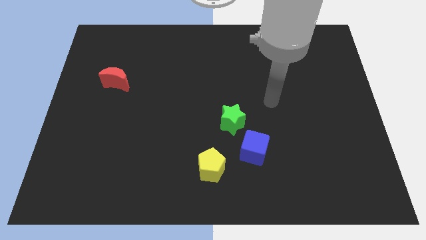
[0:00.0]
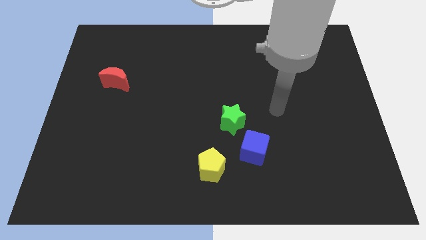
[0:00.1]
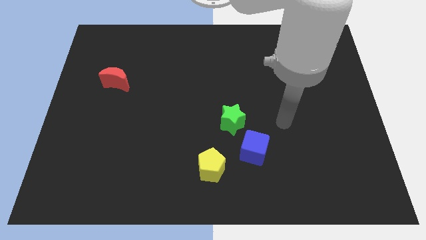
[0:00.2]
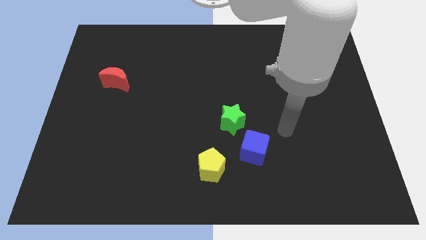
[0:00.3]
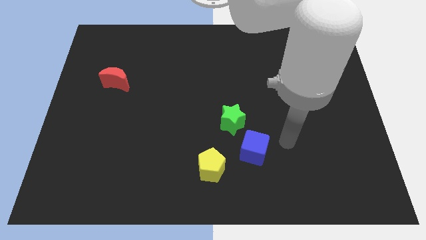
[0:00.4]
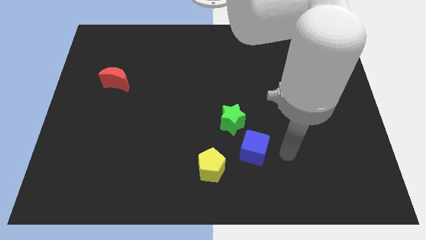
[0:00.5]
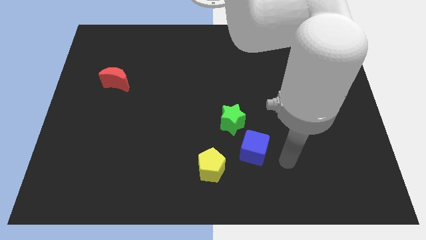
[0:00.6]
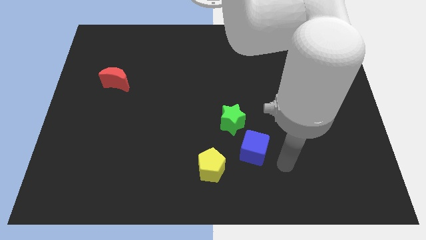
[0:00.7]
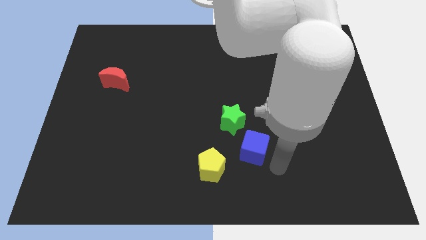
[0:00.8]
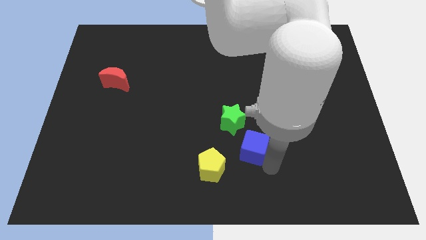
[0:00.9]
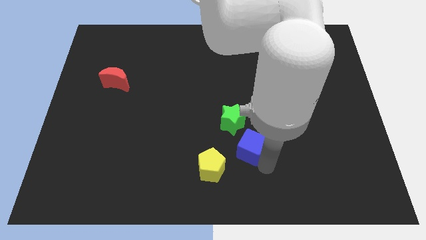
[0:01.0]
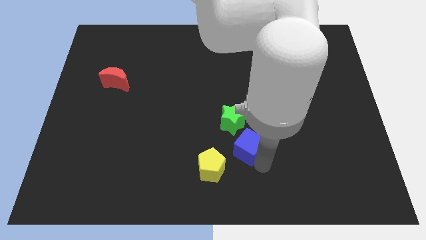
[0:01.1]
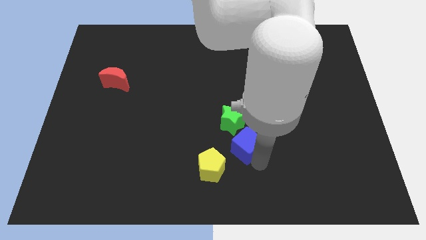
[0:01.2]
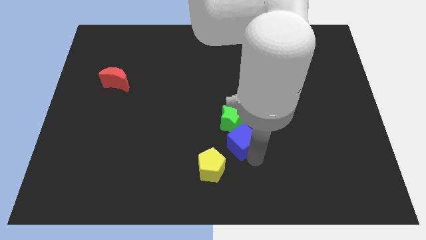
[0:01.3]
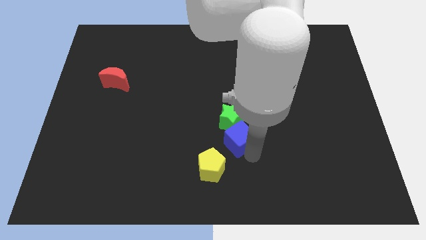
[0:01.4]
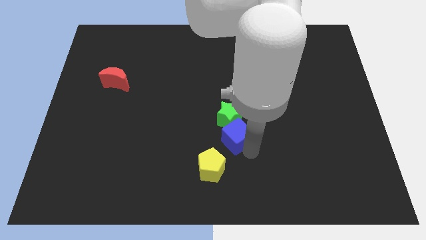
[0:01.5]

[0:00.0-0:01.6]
move the blue block next to the star

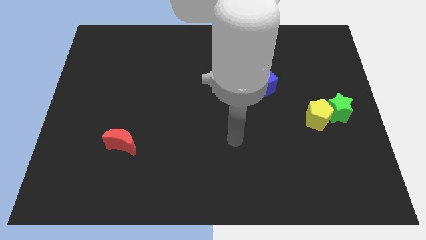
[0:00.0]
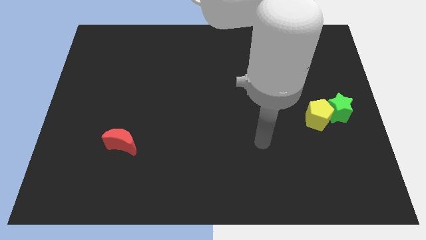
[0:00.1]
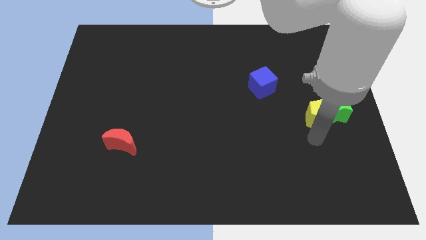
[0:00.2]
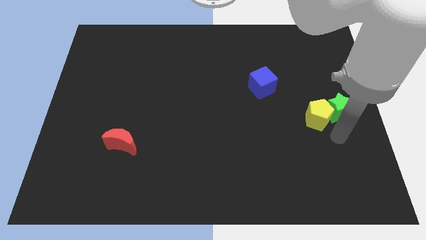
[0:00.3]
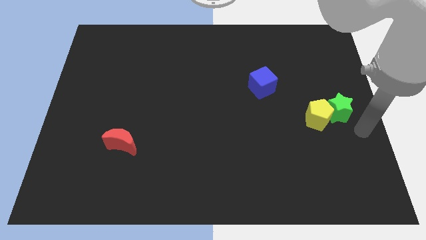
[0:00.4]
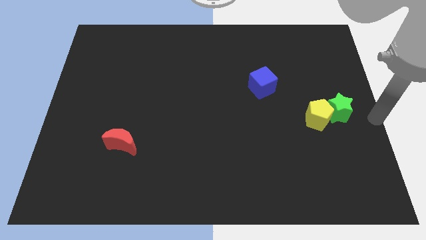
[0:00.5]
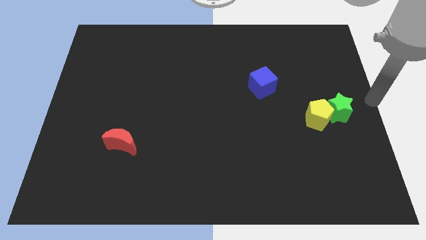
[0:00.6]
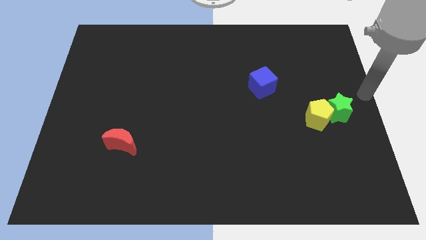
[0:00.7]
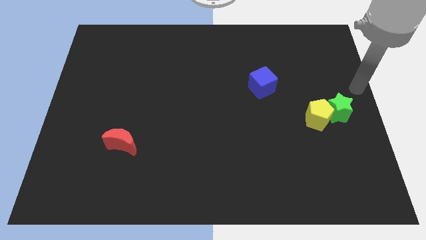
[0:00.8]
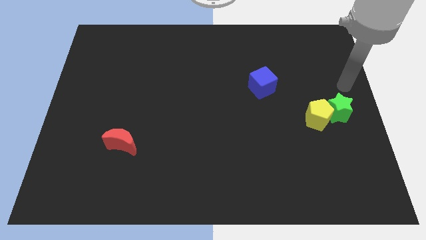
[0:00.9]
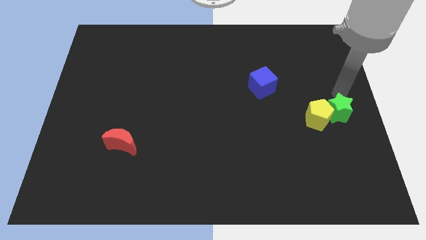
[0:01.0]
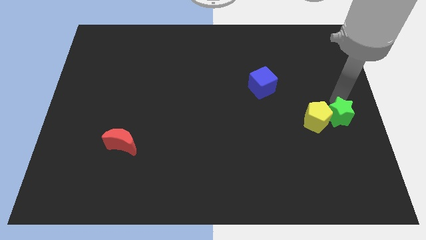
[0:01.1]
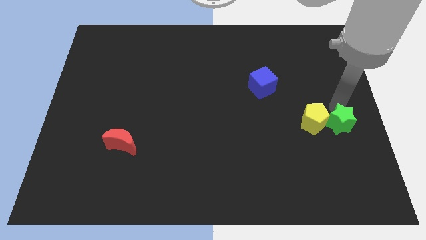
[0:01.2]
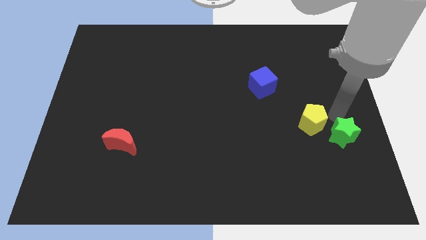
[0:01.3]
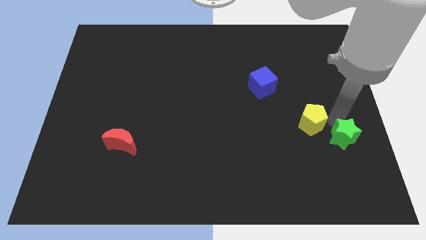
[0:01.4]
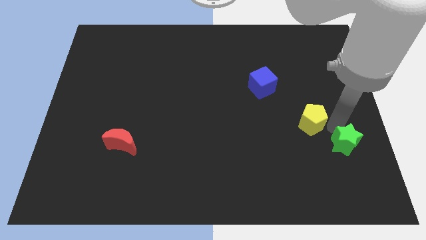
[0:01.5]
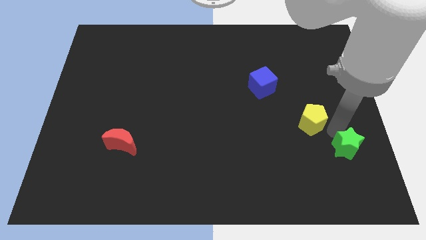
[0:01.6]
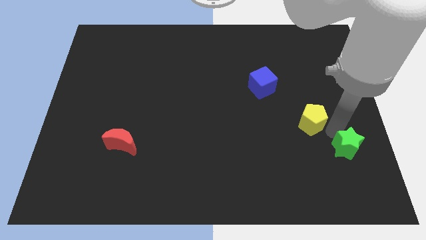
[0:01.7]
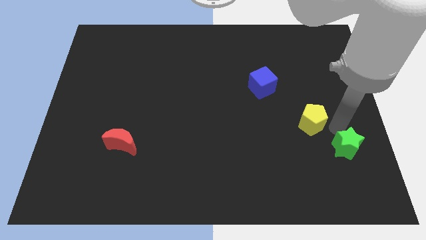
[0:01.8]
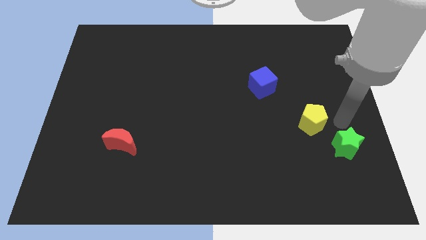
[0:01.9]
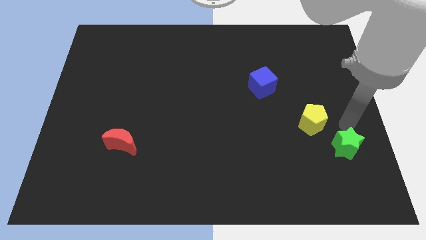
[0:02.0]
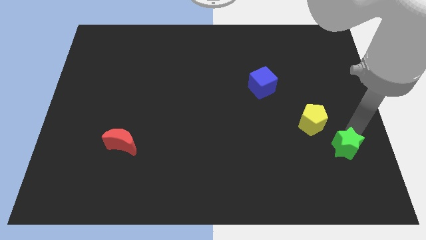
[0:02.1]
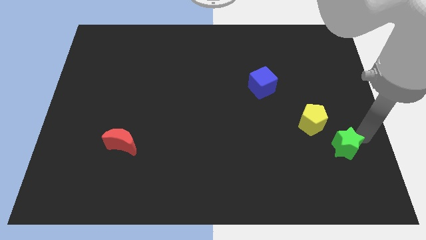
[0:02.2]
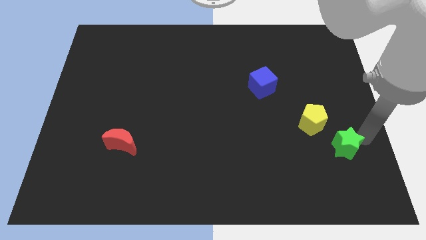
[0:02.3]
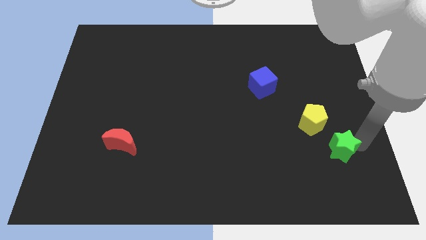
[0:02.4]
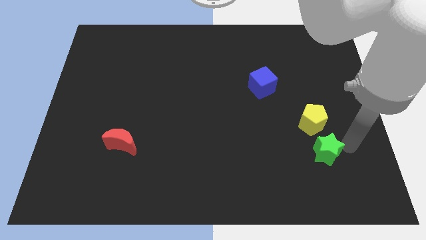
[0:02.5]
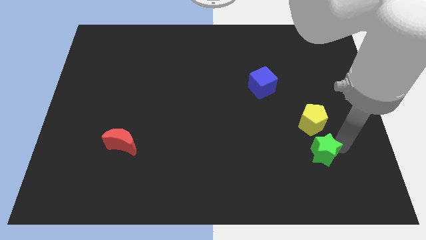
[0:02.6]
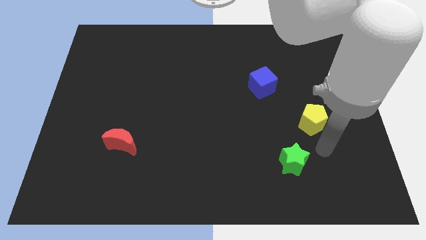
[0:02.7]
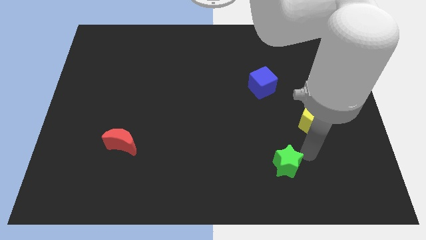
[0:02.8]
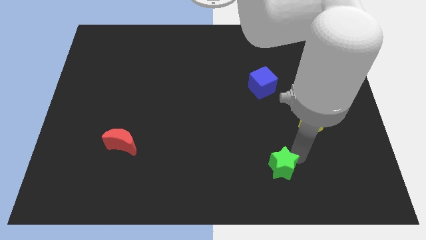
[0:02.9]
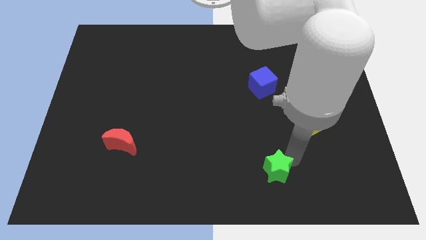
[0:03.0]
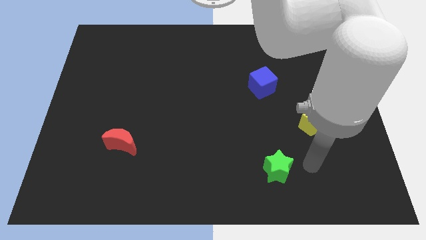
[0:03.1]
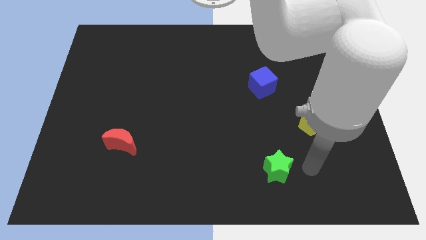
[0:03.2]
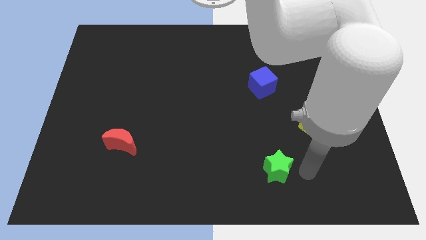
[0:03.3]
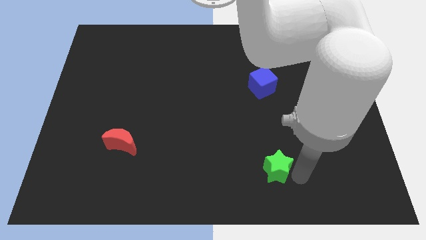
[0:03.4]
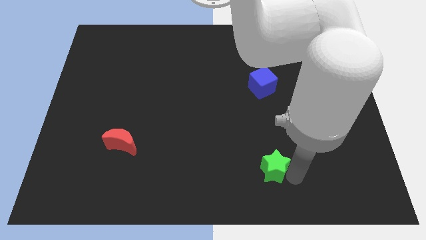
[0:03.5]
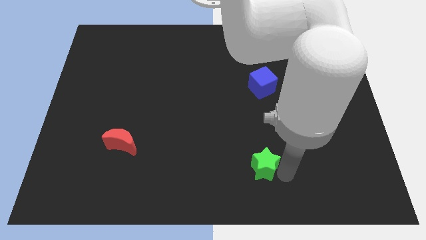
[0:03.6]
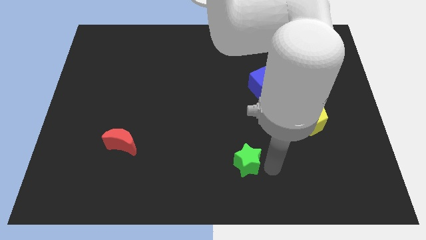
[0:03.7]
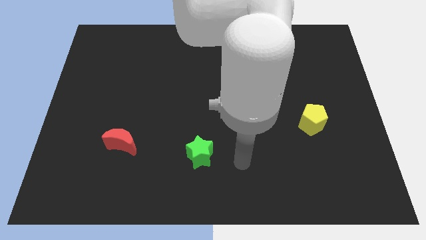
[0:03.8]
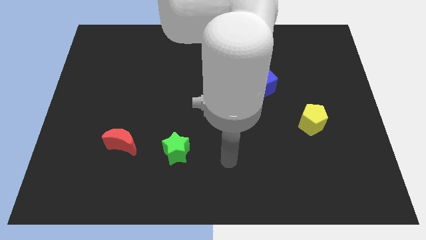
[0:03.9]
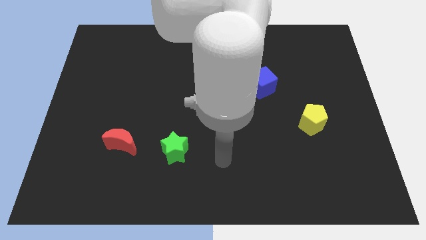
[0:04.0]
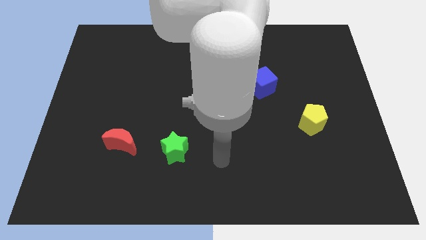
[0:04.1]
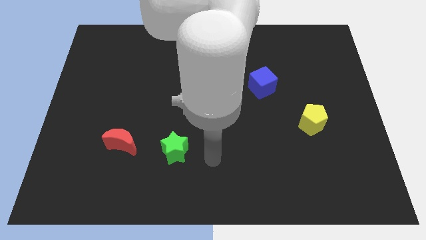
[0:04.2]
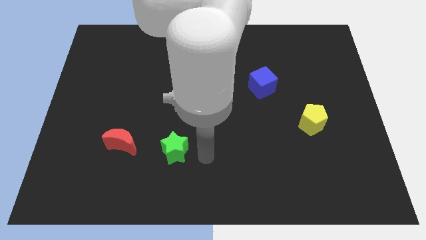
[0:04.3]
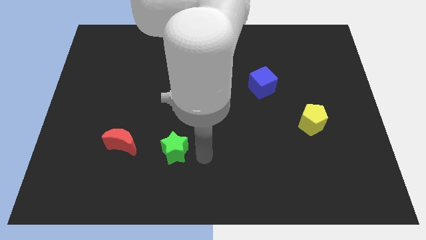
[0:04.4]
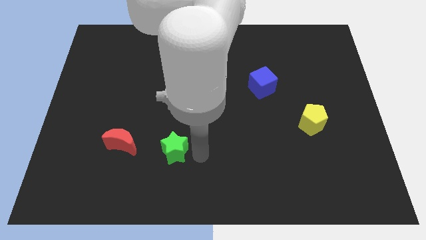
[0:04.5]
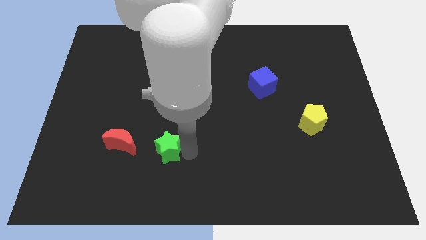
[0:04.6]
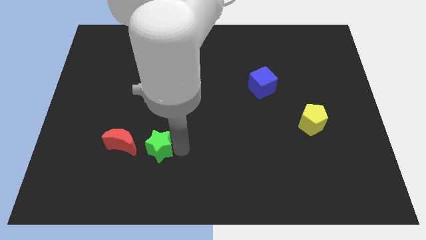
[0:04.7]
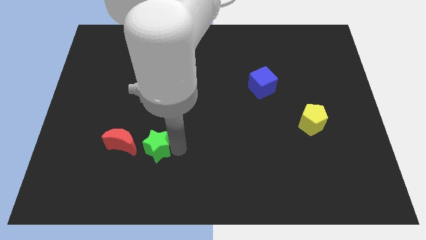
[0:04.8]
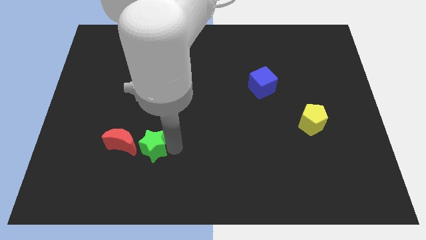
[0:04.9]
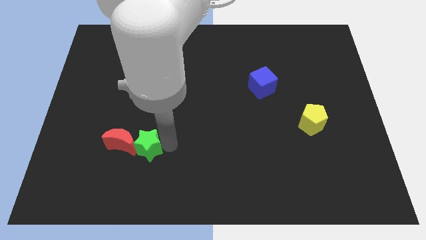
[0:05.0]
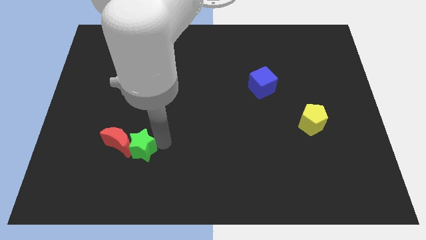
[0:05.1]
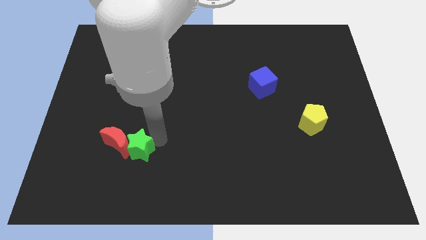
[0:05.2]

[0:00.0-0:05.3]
push the green block close to the red block

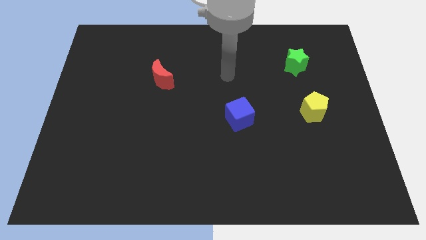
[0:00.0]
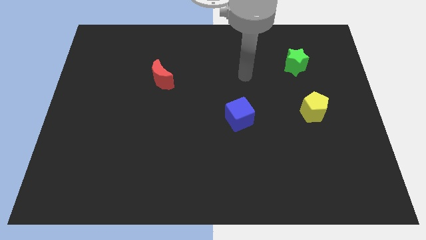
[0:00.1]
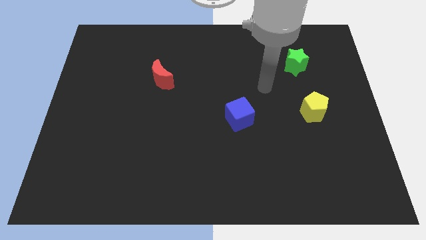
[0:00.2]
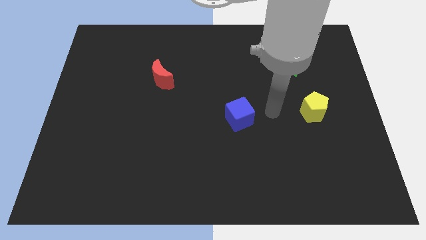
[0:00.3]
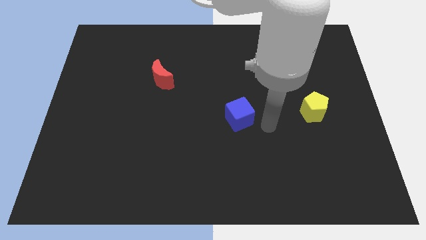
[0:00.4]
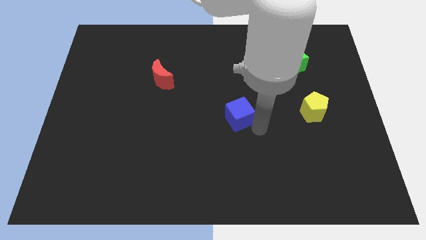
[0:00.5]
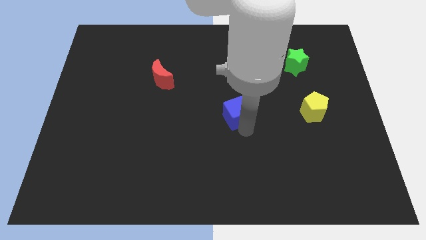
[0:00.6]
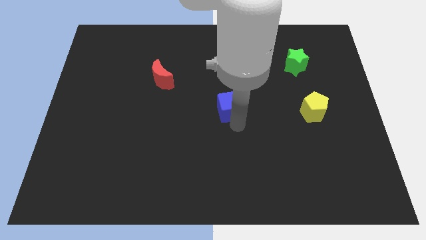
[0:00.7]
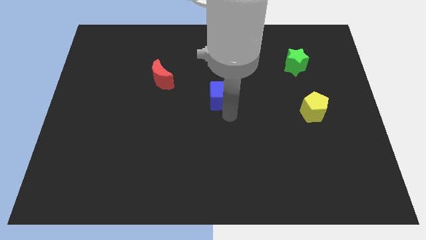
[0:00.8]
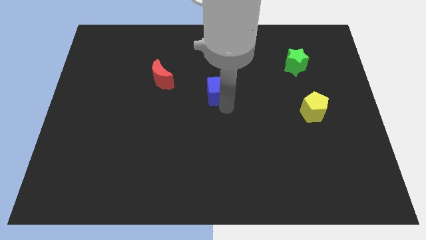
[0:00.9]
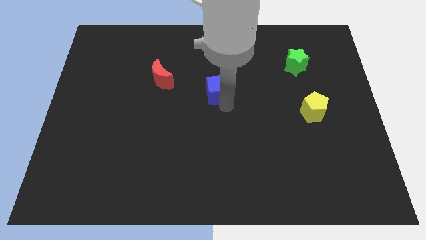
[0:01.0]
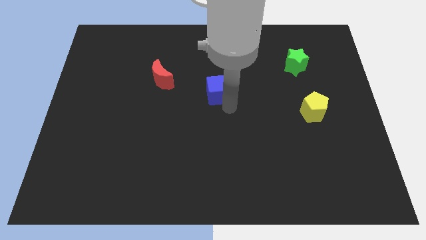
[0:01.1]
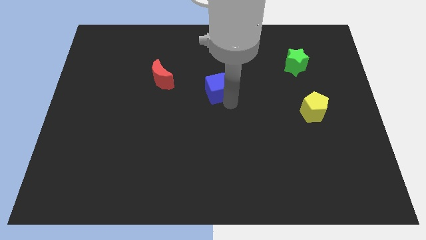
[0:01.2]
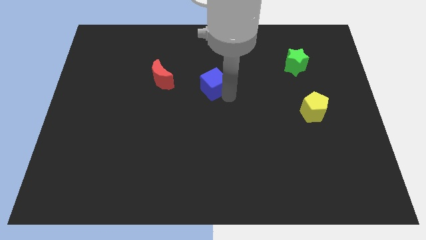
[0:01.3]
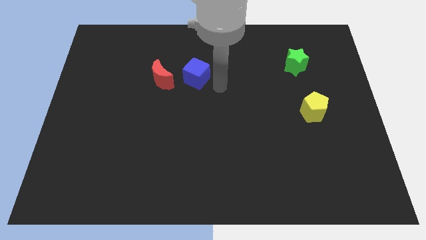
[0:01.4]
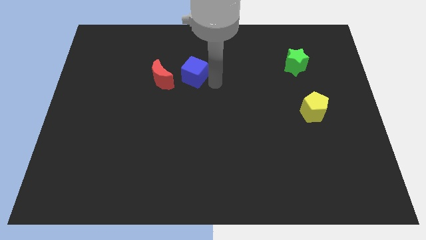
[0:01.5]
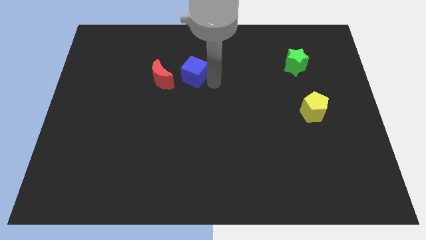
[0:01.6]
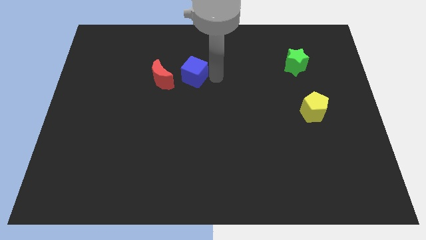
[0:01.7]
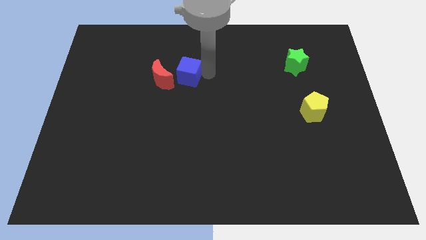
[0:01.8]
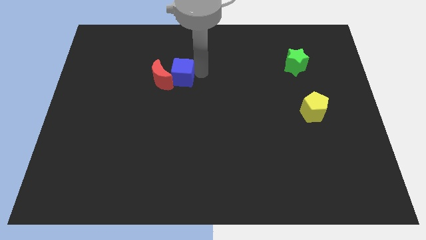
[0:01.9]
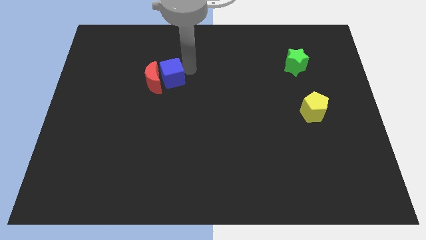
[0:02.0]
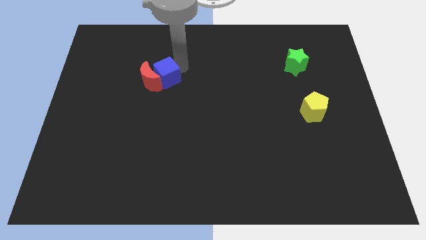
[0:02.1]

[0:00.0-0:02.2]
slide the blue cube towards the moon
